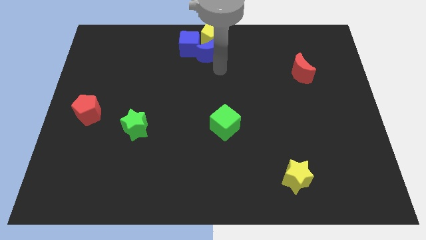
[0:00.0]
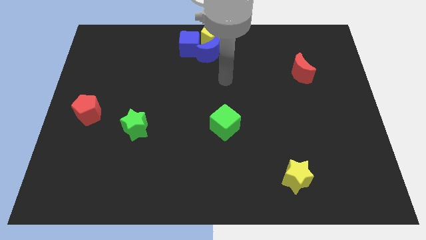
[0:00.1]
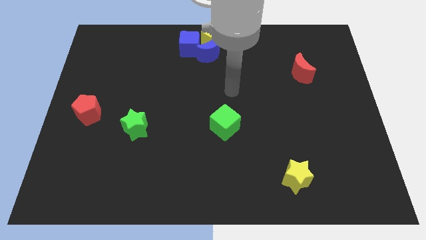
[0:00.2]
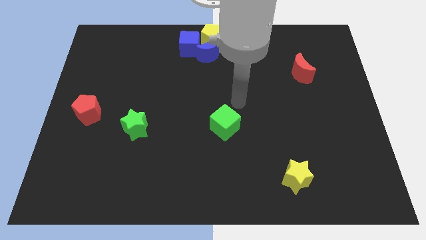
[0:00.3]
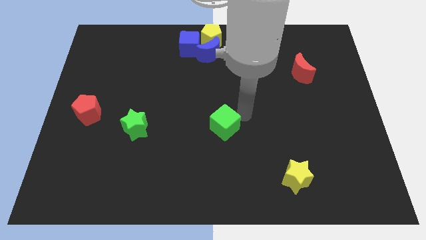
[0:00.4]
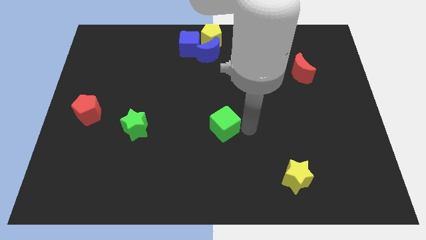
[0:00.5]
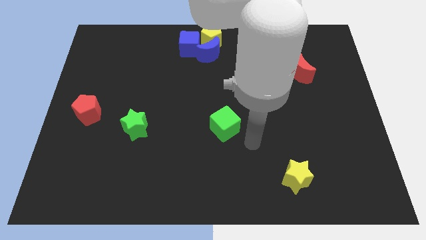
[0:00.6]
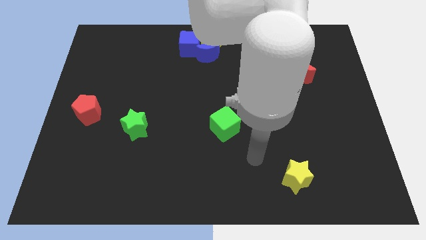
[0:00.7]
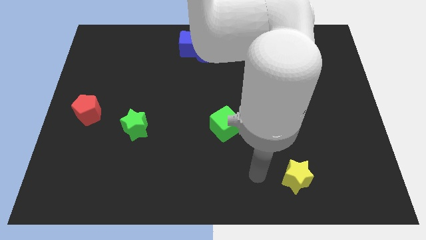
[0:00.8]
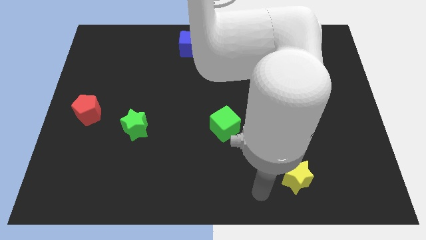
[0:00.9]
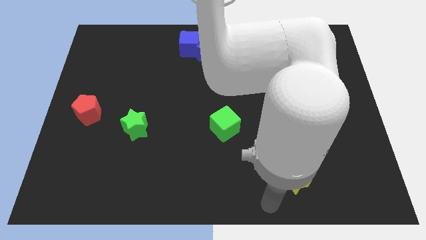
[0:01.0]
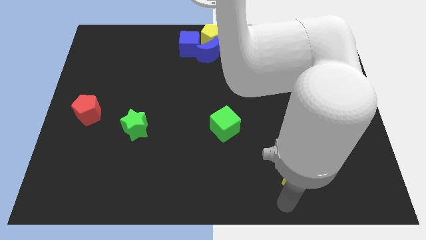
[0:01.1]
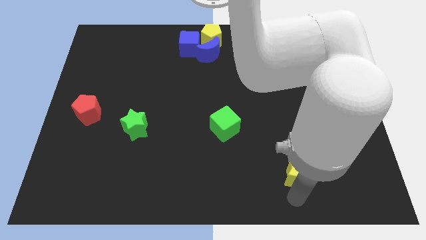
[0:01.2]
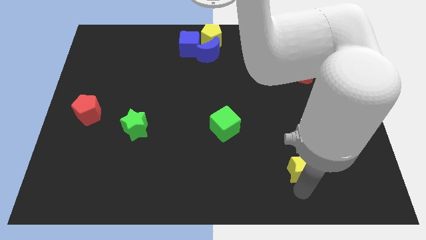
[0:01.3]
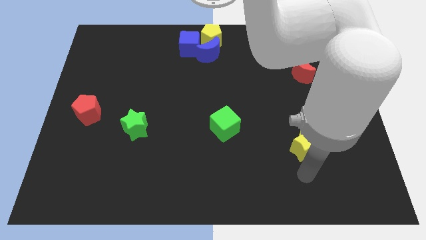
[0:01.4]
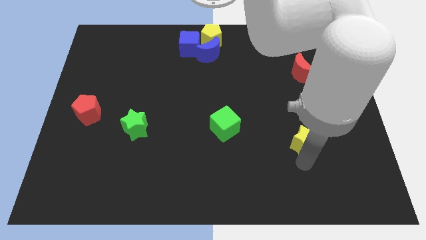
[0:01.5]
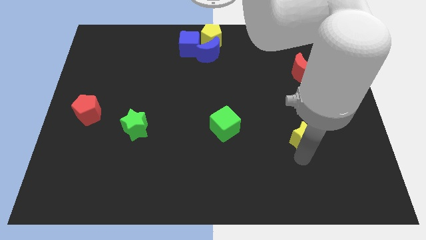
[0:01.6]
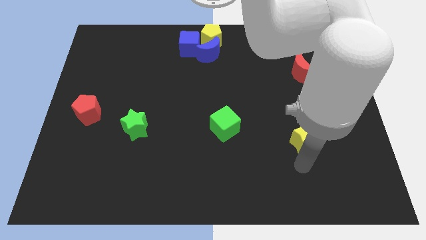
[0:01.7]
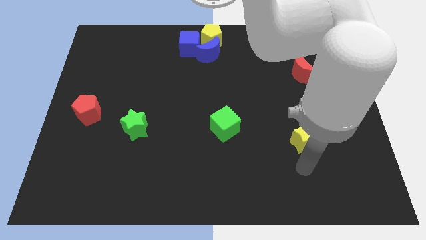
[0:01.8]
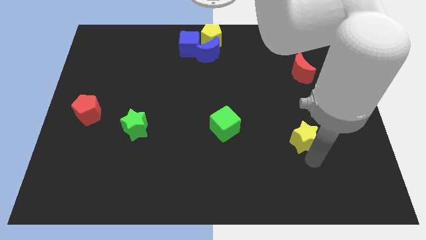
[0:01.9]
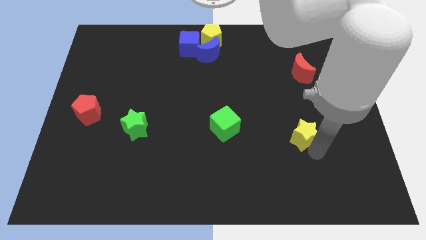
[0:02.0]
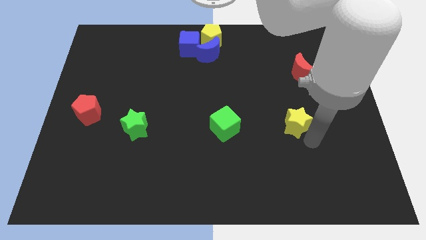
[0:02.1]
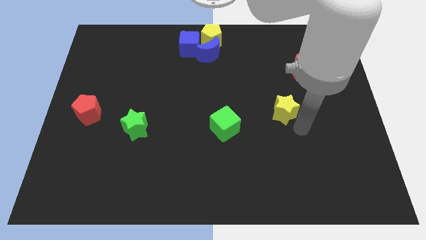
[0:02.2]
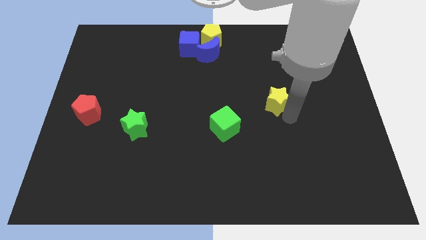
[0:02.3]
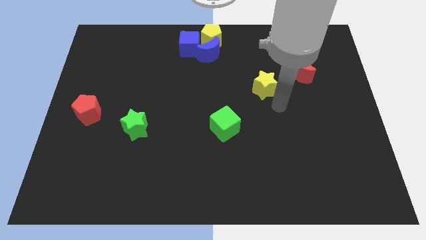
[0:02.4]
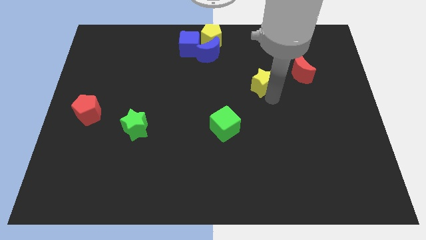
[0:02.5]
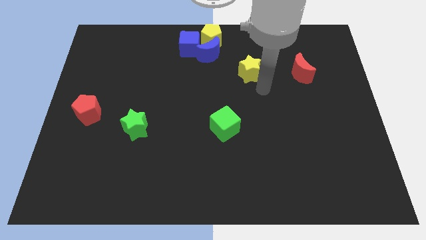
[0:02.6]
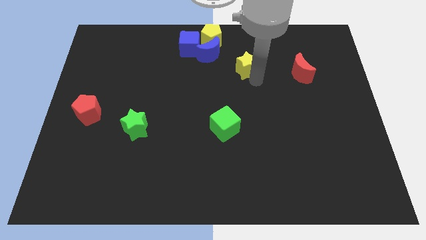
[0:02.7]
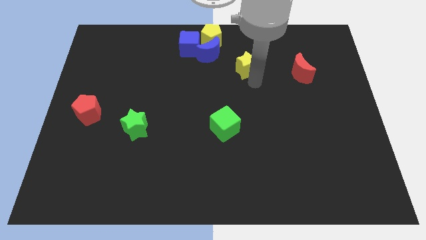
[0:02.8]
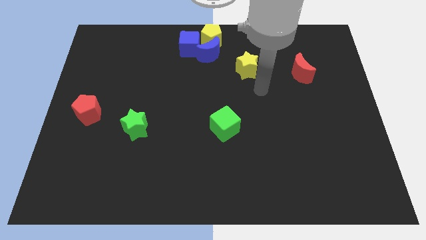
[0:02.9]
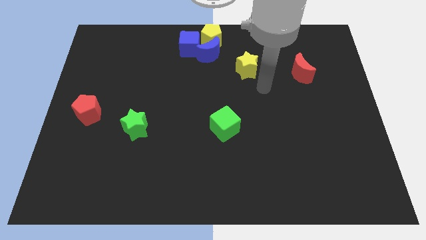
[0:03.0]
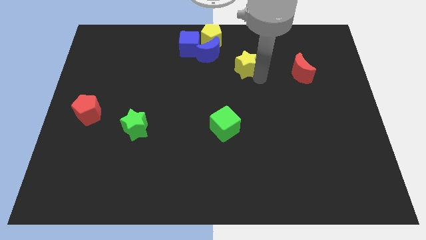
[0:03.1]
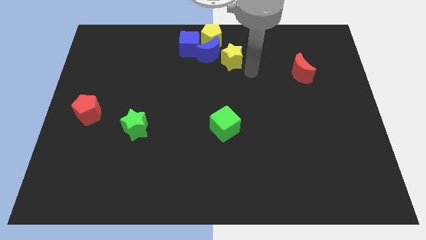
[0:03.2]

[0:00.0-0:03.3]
slide the yellow star horizontally to the left side of the red moon

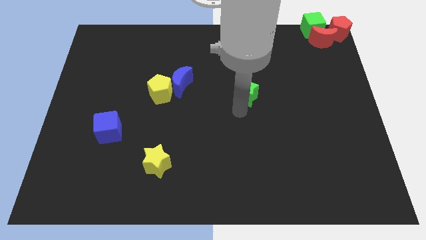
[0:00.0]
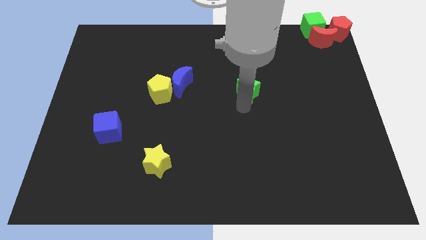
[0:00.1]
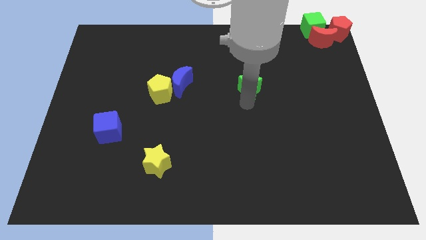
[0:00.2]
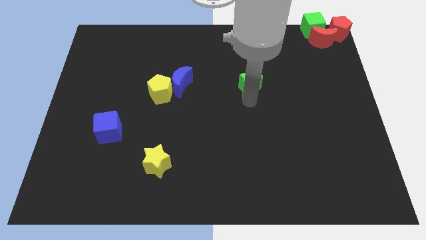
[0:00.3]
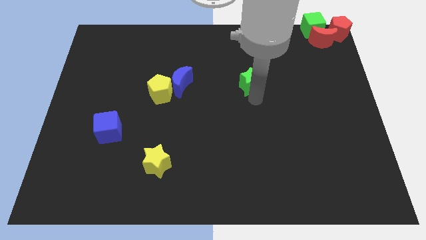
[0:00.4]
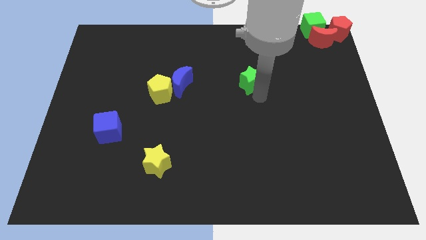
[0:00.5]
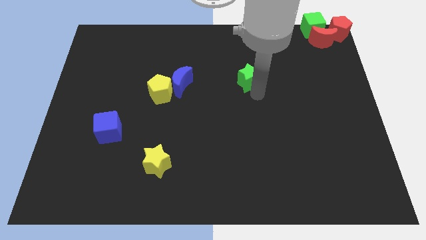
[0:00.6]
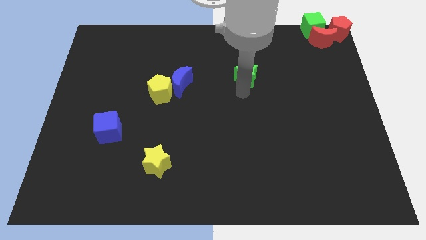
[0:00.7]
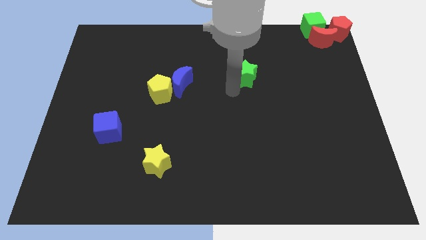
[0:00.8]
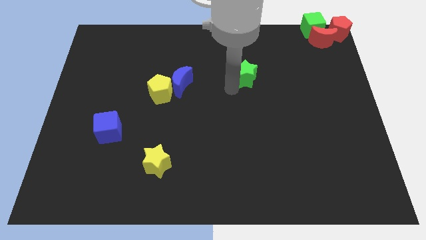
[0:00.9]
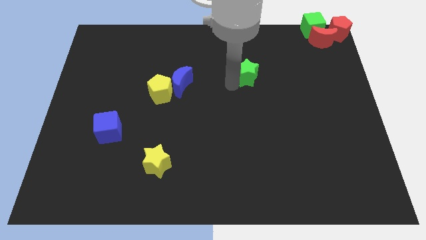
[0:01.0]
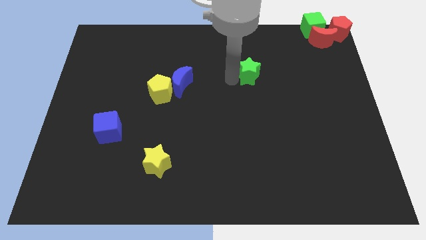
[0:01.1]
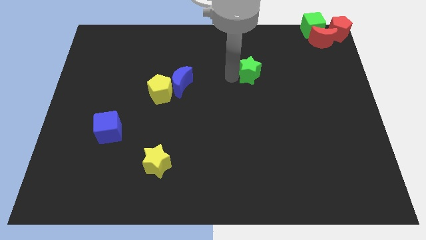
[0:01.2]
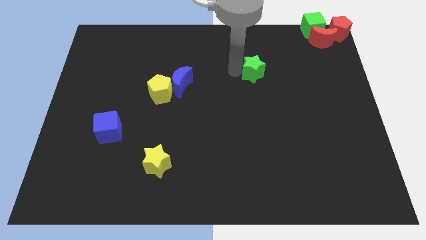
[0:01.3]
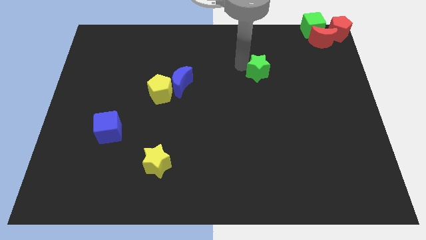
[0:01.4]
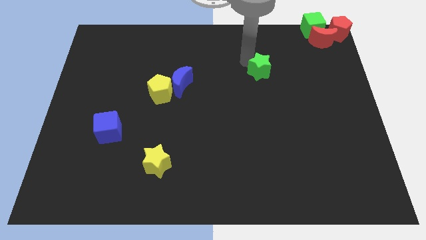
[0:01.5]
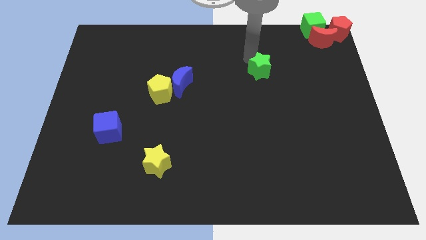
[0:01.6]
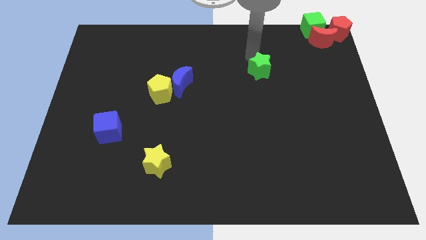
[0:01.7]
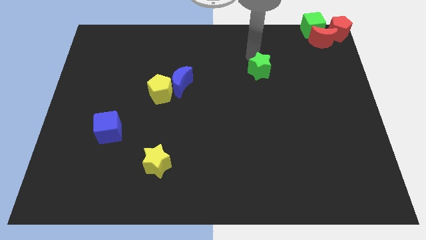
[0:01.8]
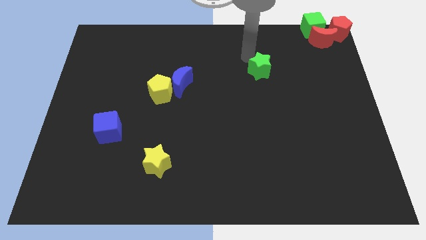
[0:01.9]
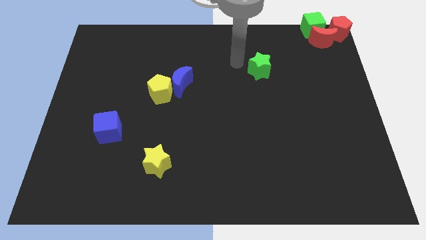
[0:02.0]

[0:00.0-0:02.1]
move the green star towards the group of blocks

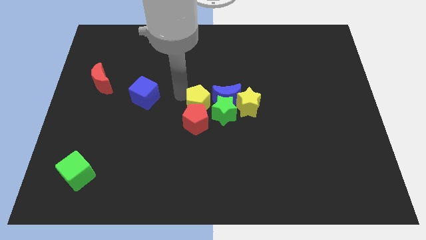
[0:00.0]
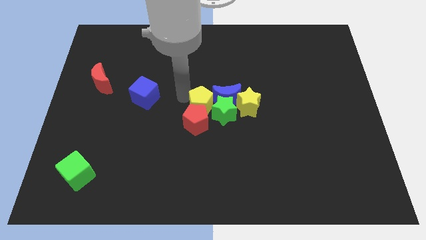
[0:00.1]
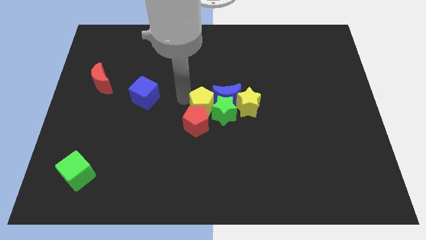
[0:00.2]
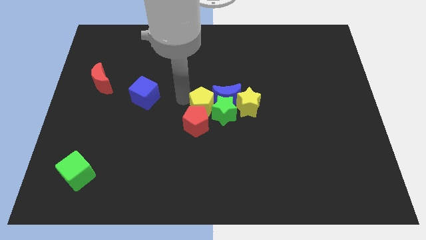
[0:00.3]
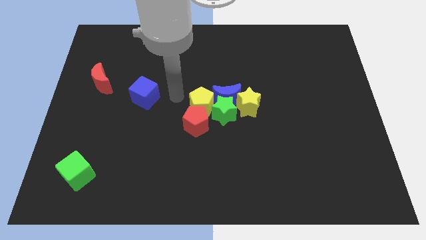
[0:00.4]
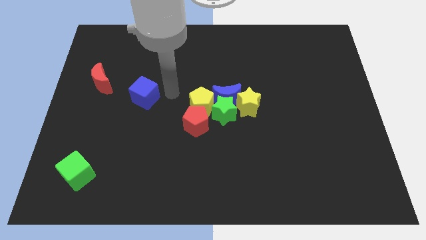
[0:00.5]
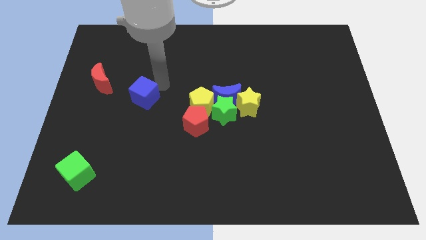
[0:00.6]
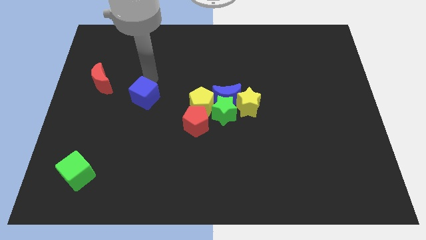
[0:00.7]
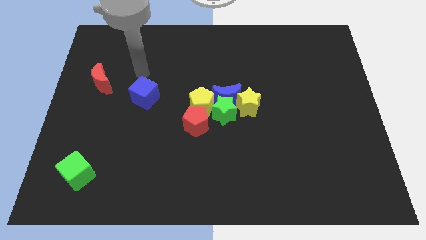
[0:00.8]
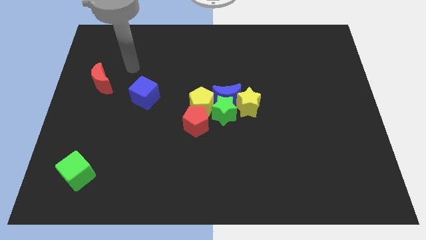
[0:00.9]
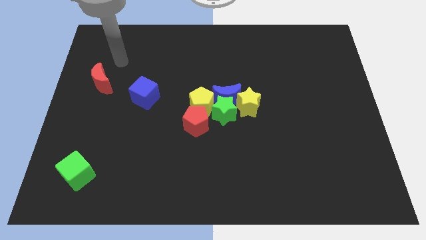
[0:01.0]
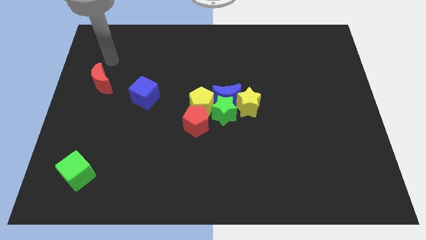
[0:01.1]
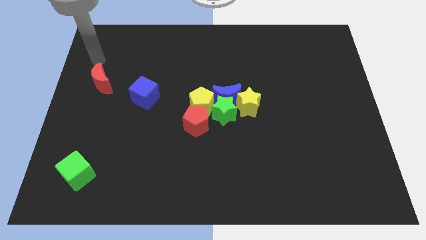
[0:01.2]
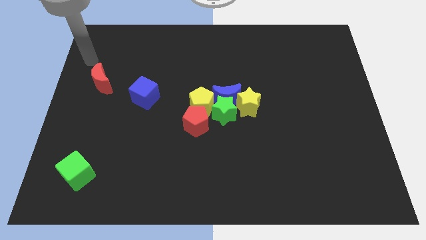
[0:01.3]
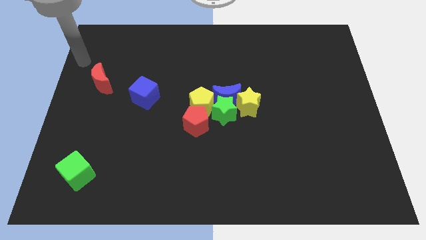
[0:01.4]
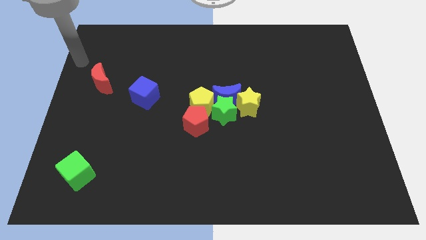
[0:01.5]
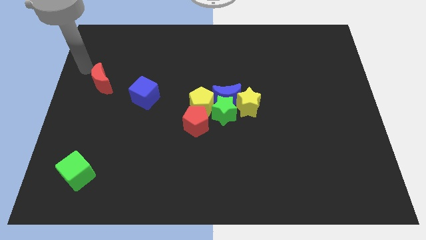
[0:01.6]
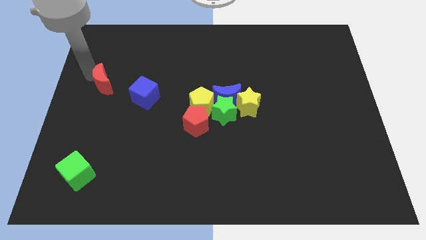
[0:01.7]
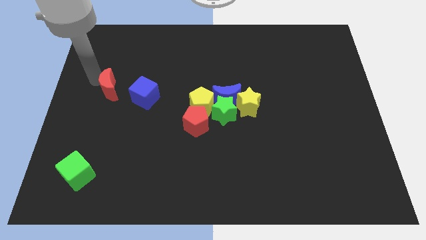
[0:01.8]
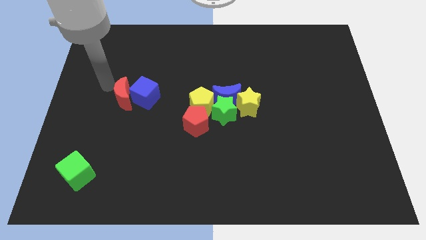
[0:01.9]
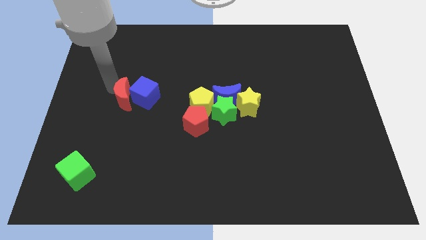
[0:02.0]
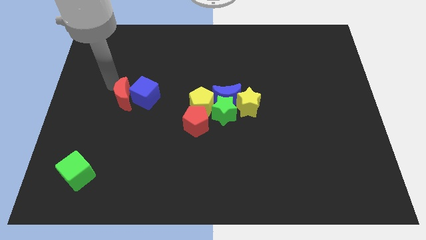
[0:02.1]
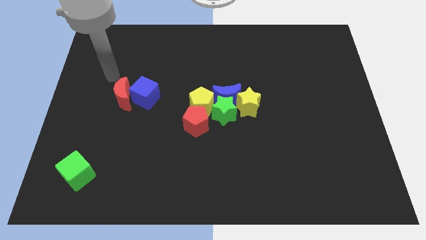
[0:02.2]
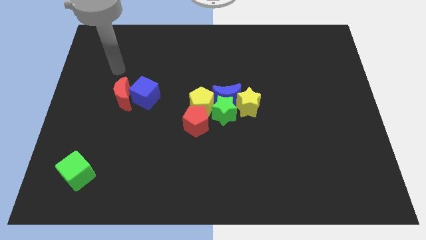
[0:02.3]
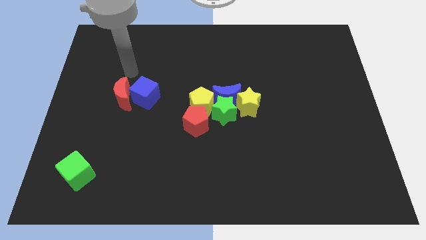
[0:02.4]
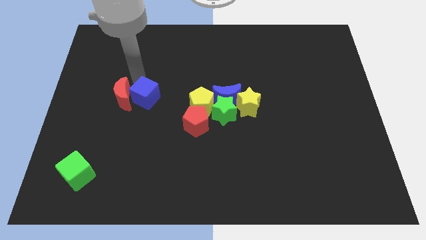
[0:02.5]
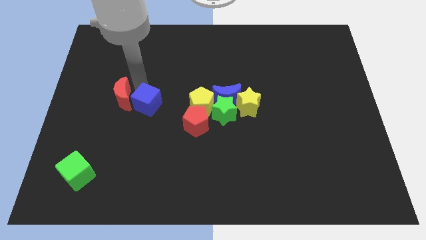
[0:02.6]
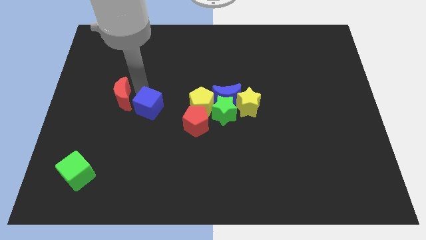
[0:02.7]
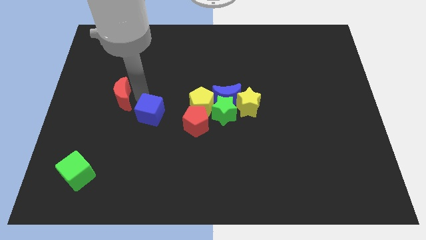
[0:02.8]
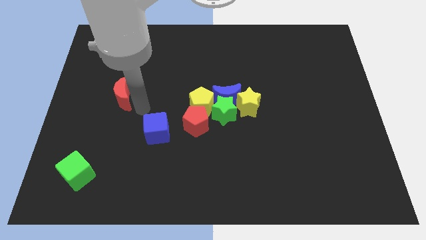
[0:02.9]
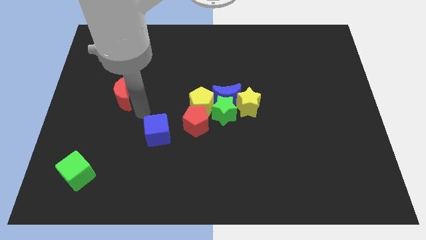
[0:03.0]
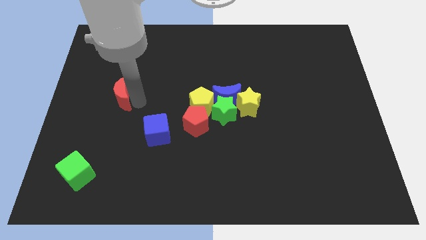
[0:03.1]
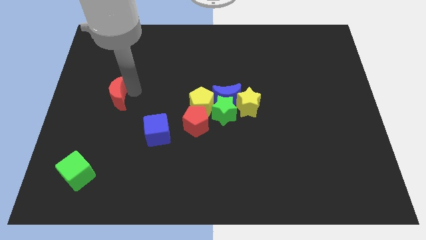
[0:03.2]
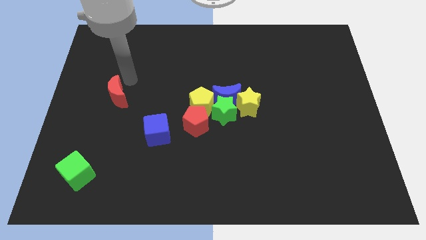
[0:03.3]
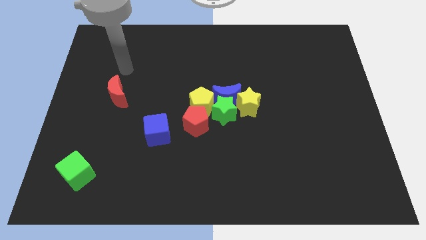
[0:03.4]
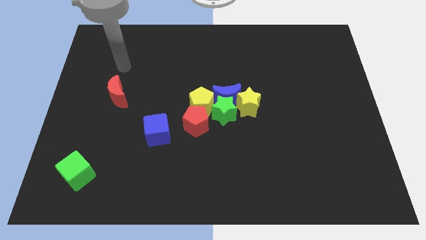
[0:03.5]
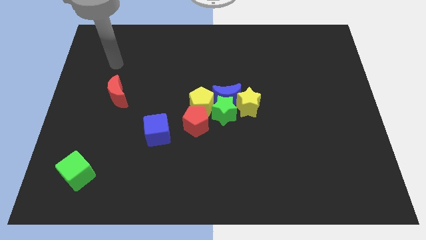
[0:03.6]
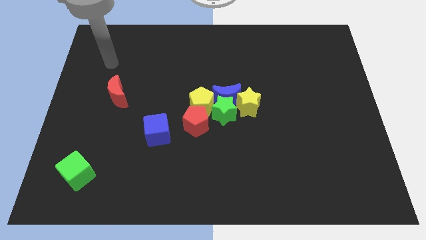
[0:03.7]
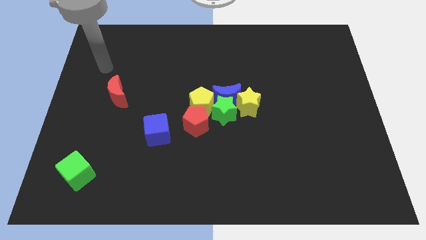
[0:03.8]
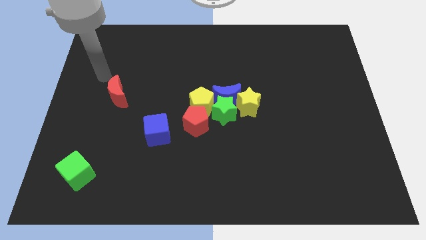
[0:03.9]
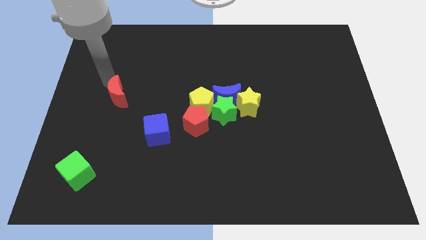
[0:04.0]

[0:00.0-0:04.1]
move the red crescent towards the blue cube
